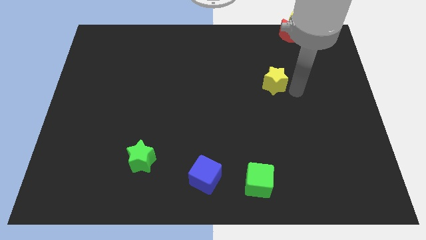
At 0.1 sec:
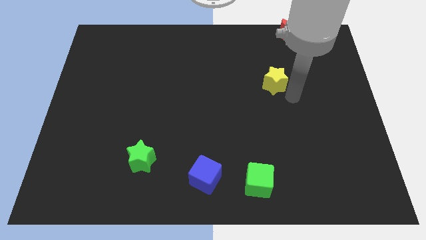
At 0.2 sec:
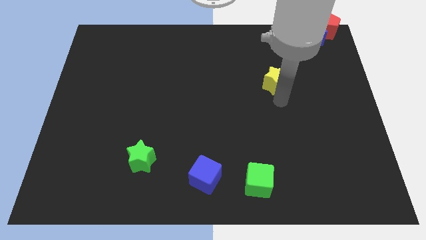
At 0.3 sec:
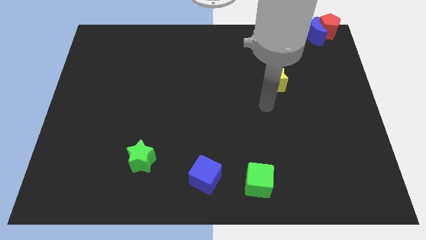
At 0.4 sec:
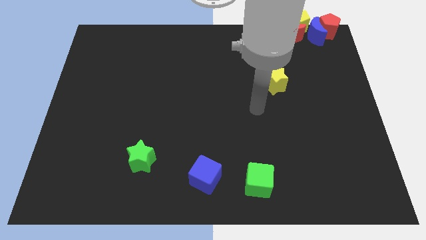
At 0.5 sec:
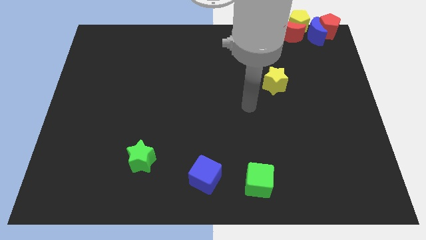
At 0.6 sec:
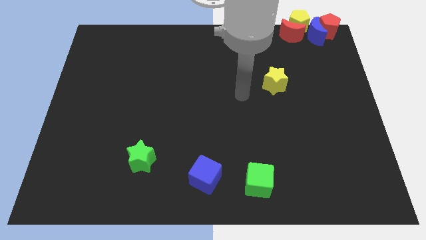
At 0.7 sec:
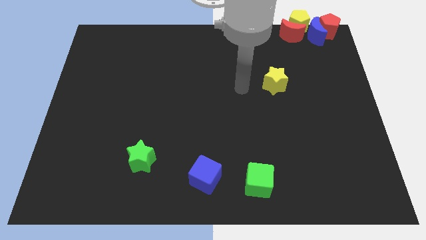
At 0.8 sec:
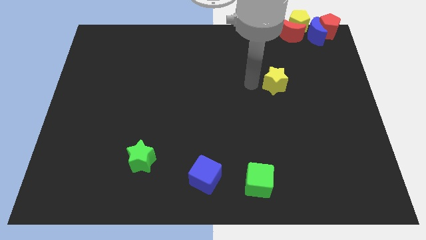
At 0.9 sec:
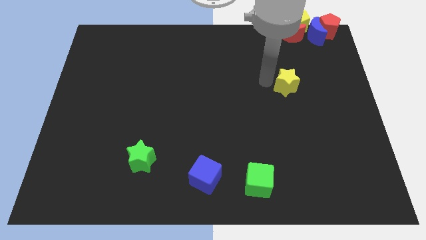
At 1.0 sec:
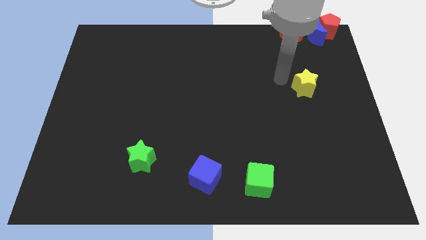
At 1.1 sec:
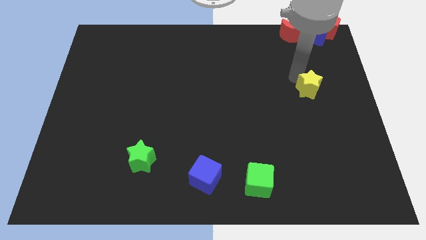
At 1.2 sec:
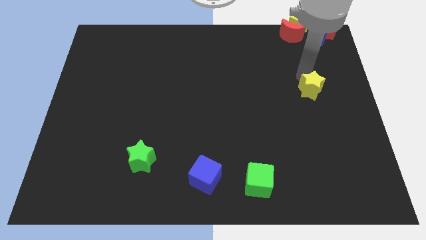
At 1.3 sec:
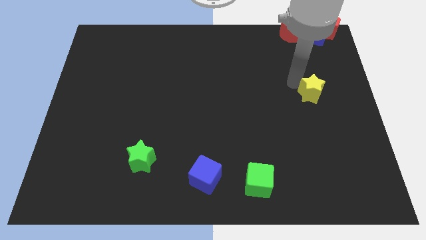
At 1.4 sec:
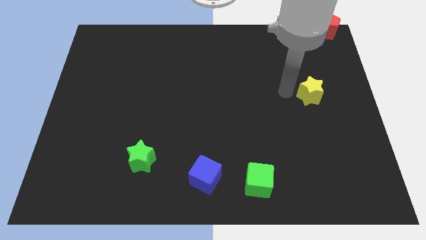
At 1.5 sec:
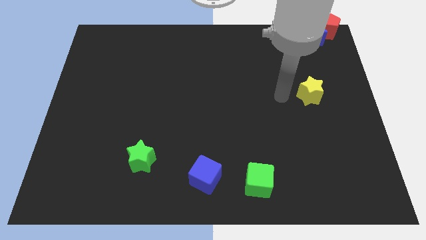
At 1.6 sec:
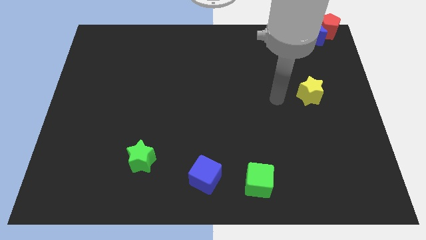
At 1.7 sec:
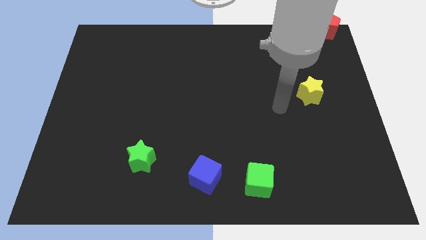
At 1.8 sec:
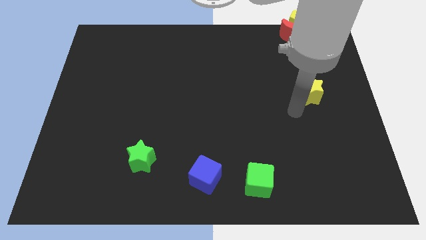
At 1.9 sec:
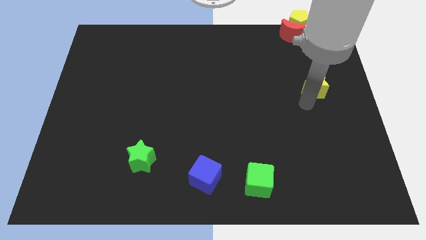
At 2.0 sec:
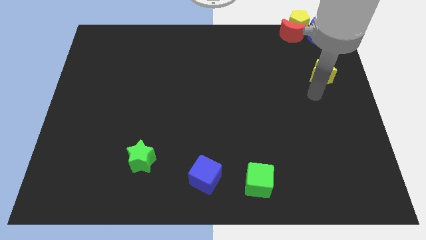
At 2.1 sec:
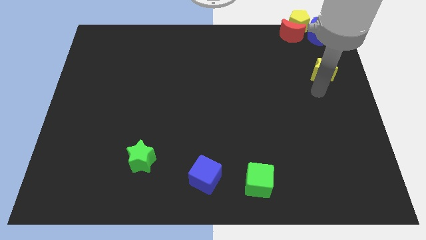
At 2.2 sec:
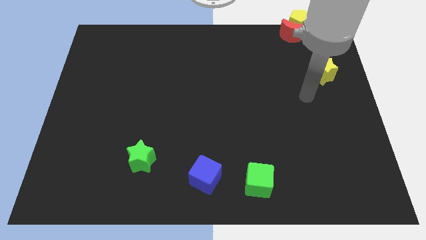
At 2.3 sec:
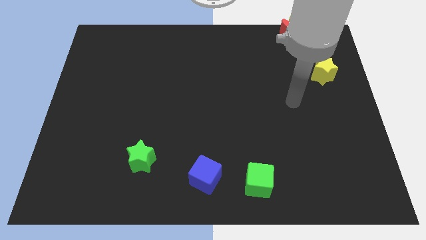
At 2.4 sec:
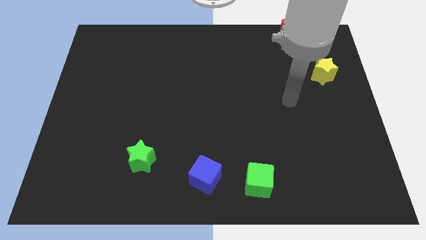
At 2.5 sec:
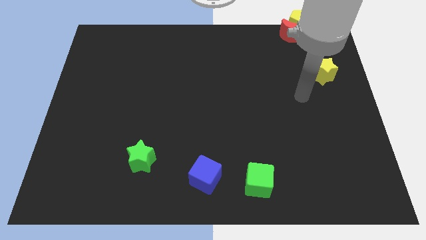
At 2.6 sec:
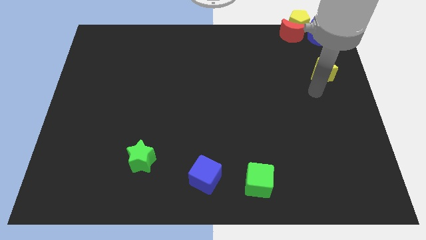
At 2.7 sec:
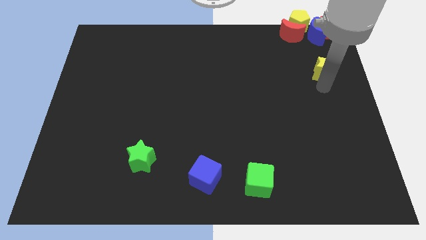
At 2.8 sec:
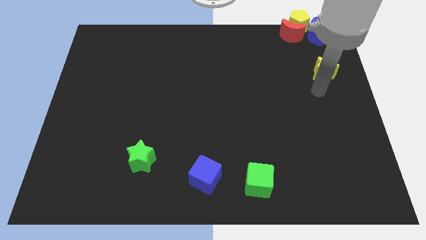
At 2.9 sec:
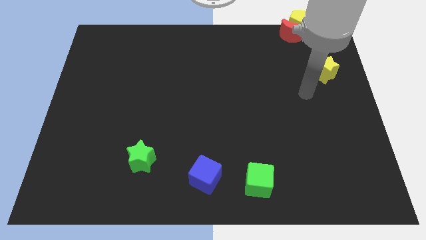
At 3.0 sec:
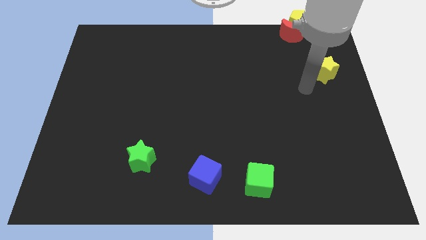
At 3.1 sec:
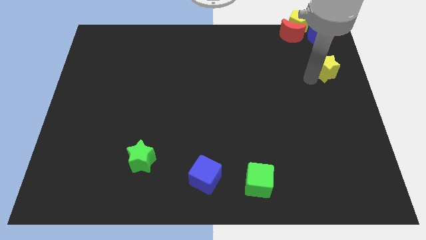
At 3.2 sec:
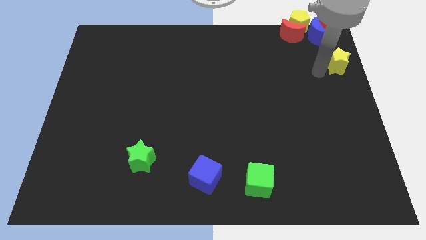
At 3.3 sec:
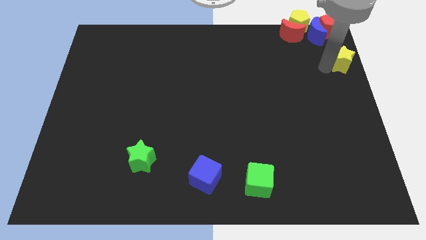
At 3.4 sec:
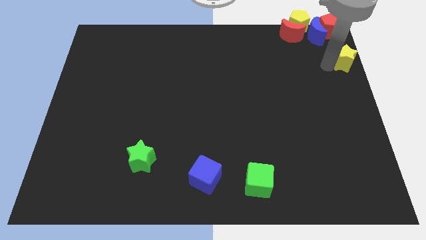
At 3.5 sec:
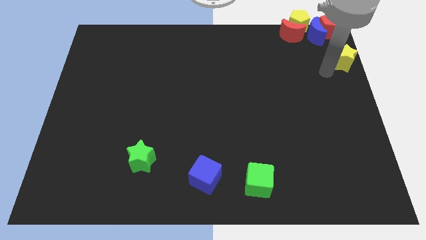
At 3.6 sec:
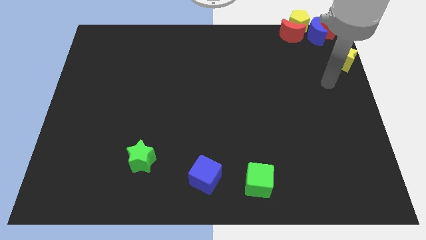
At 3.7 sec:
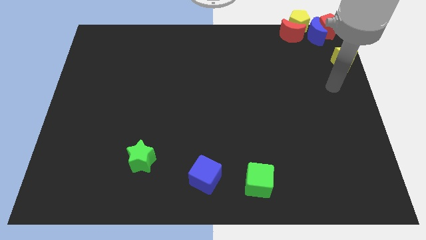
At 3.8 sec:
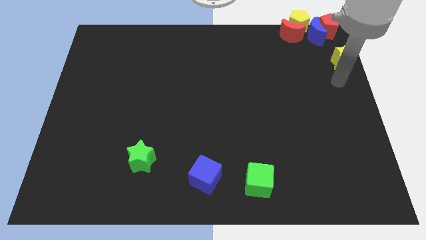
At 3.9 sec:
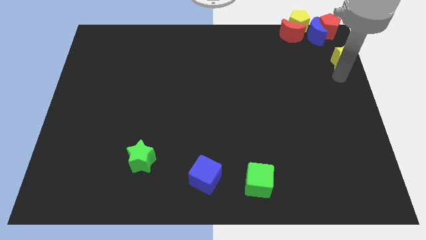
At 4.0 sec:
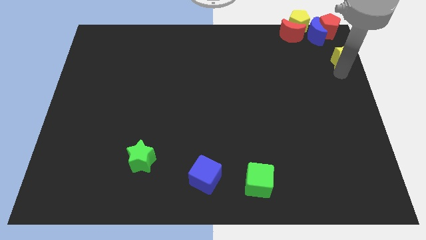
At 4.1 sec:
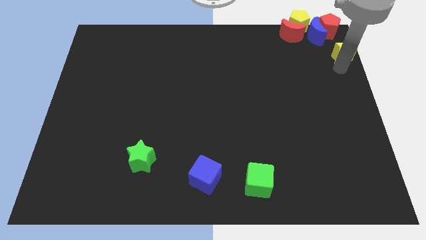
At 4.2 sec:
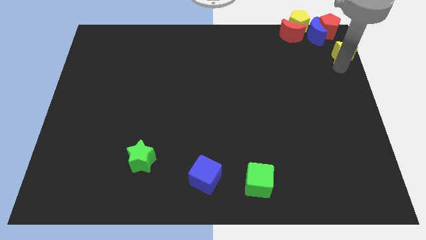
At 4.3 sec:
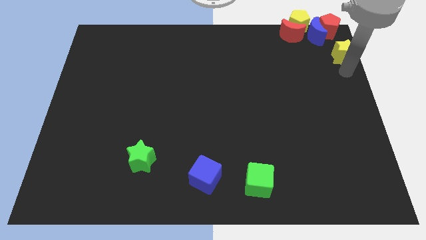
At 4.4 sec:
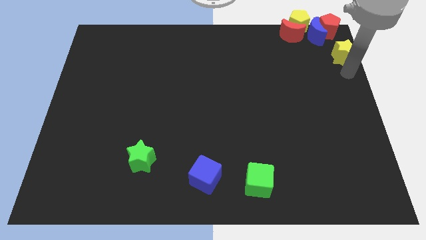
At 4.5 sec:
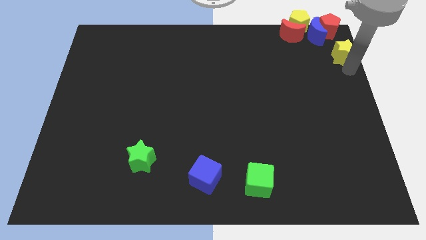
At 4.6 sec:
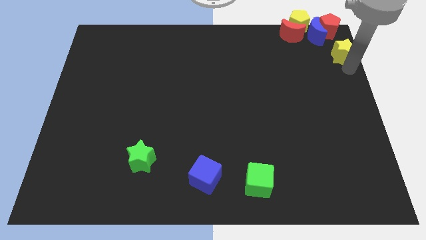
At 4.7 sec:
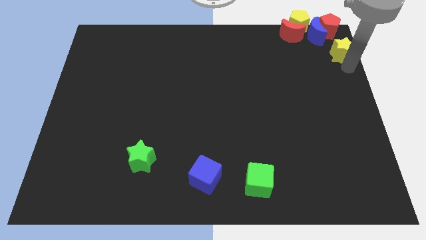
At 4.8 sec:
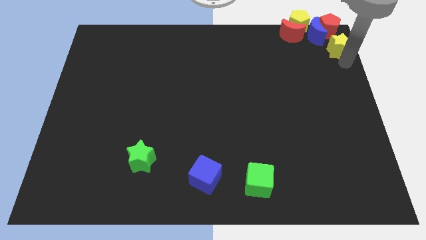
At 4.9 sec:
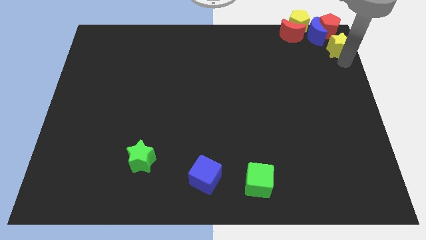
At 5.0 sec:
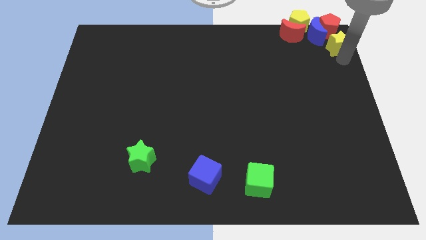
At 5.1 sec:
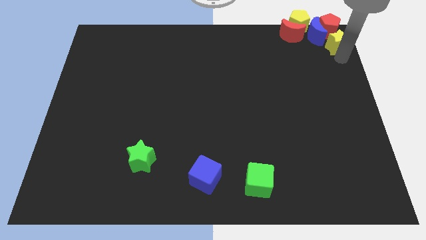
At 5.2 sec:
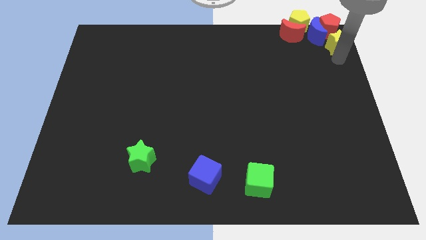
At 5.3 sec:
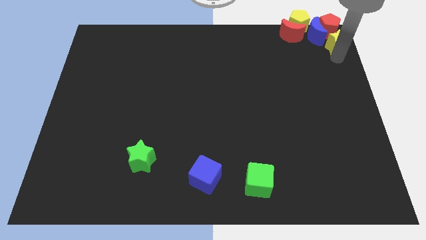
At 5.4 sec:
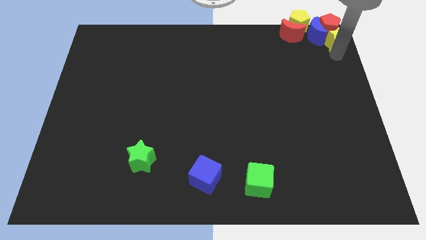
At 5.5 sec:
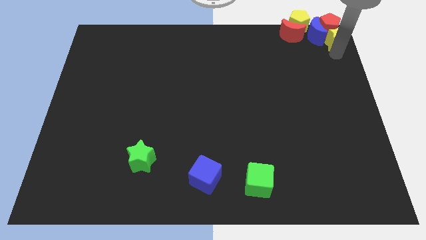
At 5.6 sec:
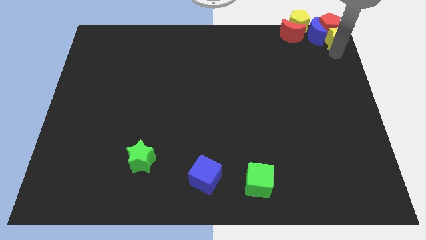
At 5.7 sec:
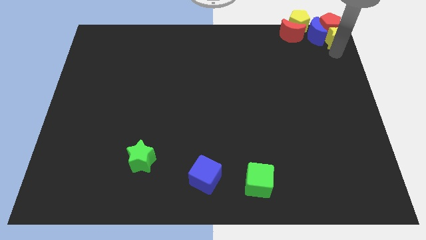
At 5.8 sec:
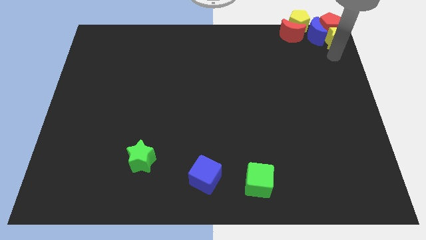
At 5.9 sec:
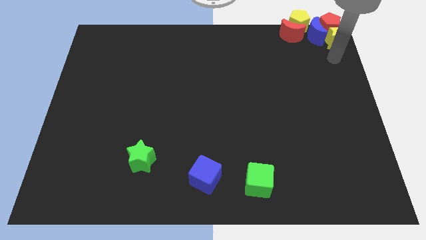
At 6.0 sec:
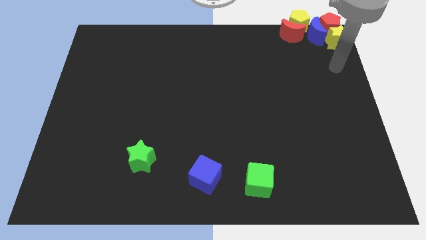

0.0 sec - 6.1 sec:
push yellow star to the top right

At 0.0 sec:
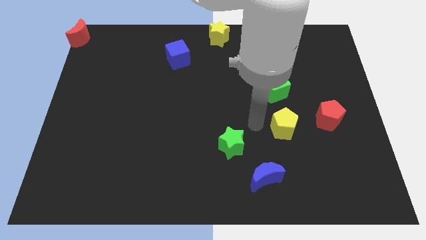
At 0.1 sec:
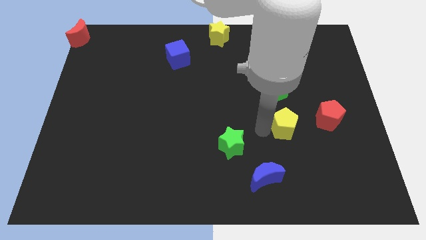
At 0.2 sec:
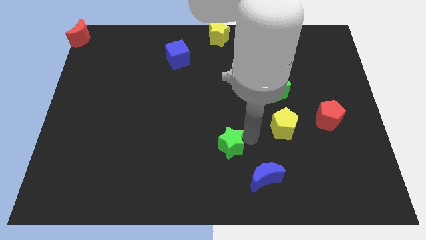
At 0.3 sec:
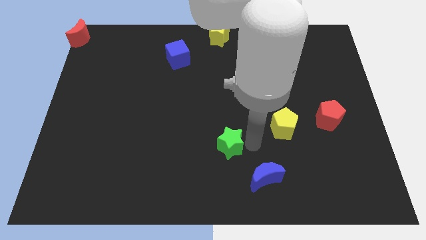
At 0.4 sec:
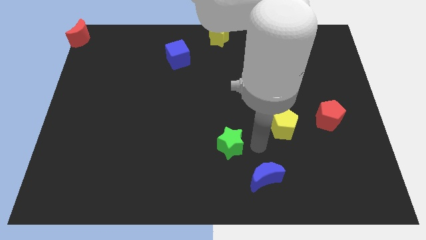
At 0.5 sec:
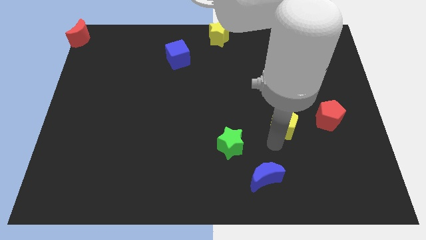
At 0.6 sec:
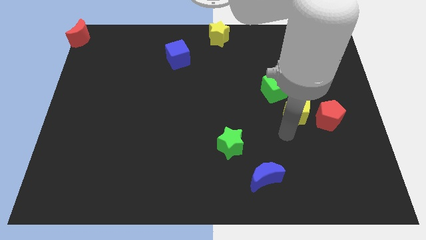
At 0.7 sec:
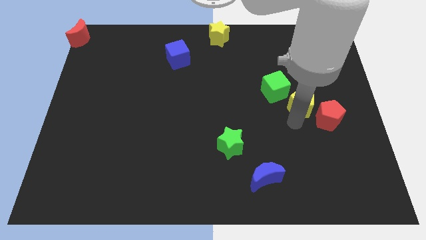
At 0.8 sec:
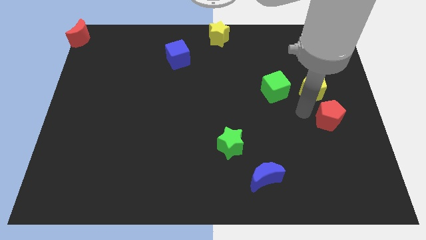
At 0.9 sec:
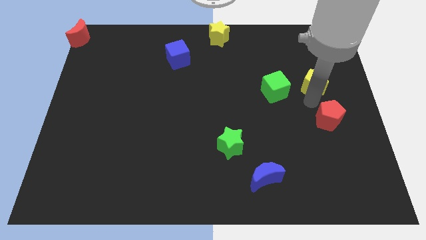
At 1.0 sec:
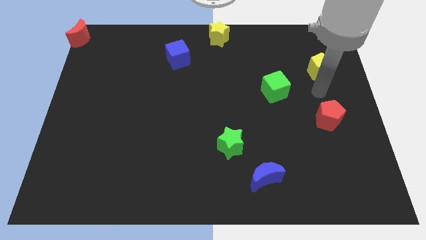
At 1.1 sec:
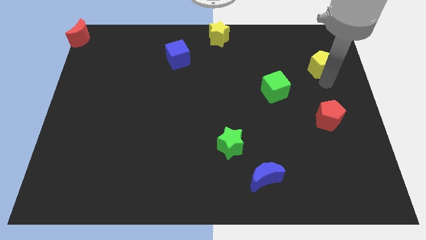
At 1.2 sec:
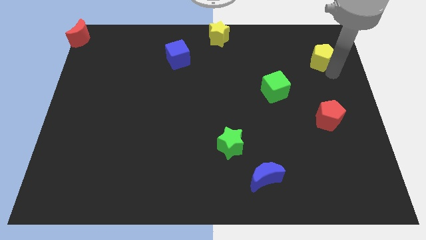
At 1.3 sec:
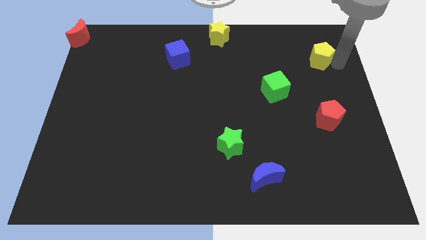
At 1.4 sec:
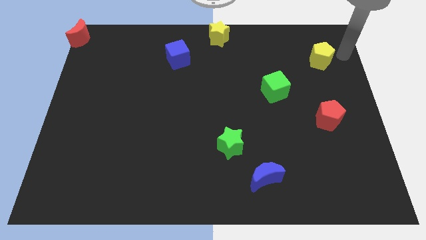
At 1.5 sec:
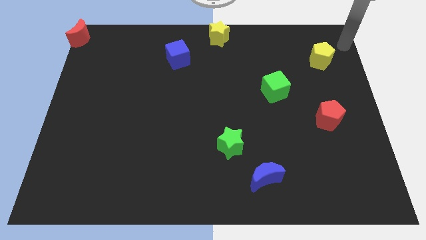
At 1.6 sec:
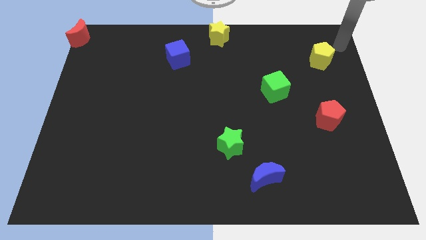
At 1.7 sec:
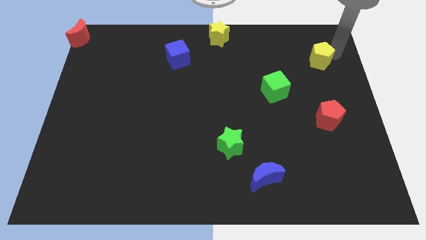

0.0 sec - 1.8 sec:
push the yellow pentagon towards the top right corner

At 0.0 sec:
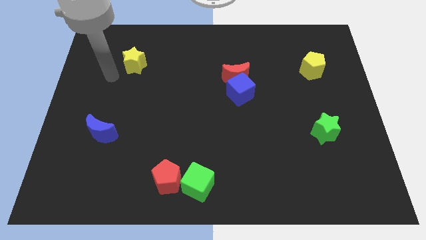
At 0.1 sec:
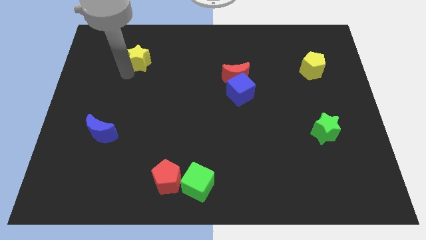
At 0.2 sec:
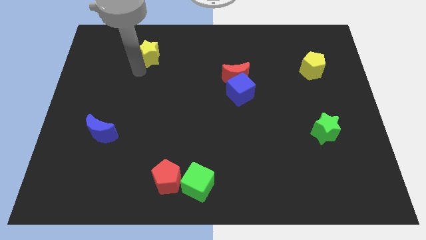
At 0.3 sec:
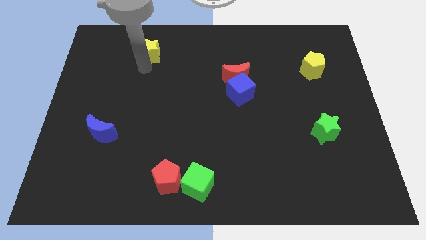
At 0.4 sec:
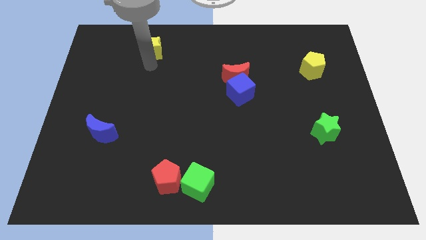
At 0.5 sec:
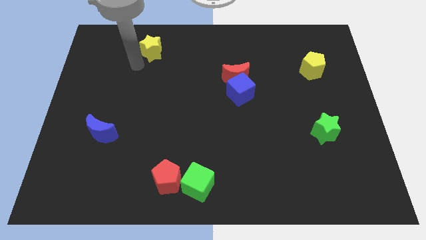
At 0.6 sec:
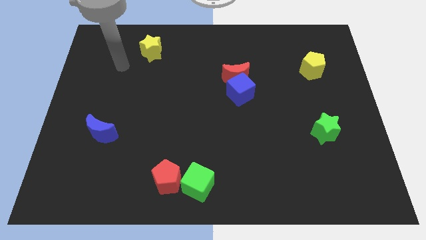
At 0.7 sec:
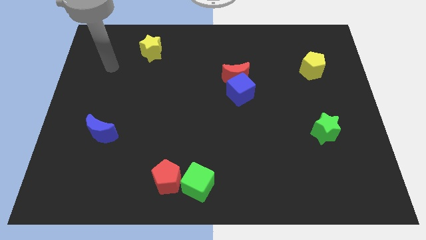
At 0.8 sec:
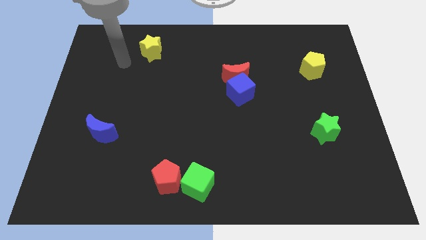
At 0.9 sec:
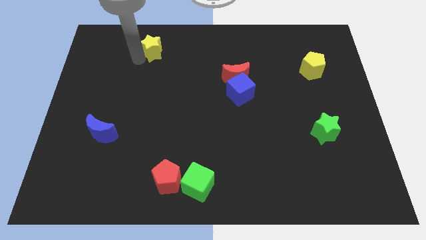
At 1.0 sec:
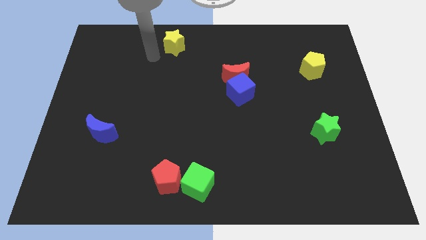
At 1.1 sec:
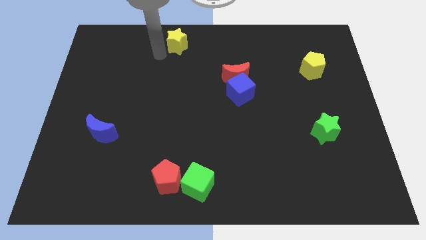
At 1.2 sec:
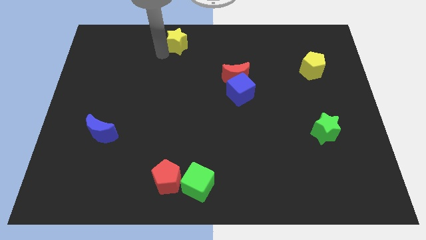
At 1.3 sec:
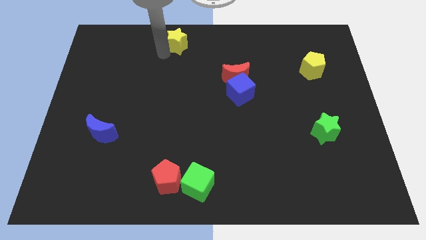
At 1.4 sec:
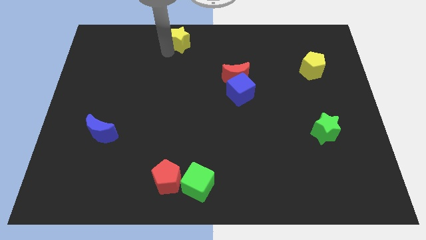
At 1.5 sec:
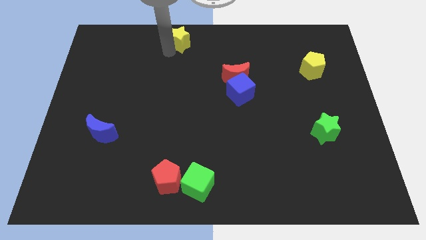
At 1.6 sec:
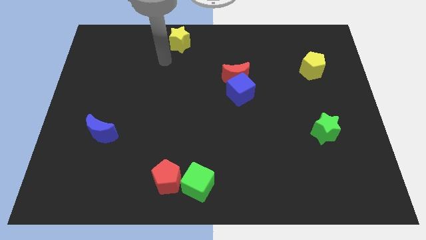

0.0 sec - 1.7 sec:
move the yellow star towards top center of the board
